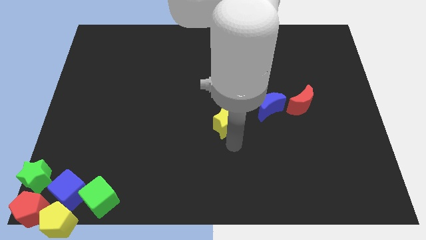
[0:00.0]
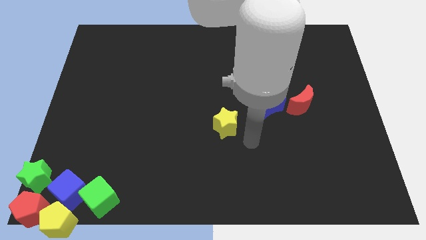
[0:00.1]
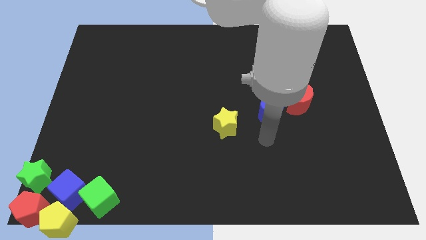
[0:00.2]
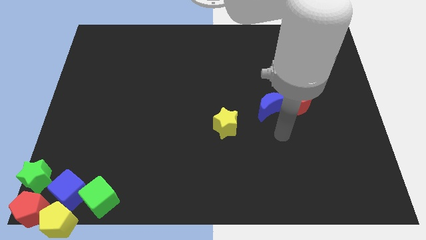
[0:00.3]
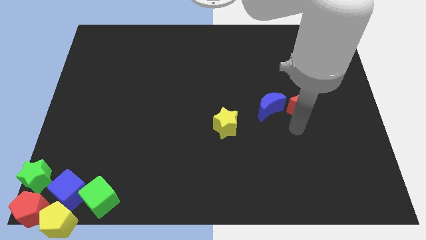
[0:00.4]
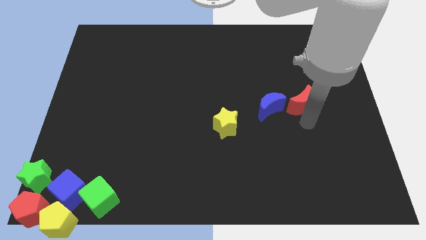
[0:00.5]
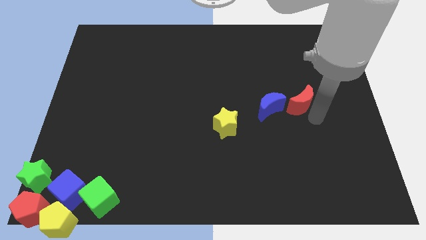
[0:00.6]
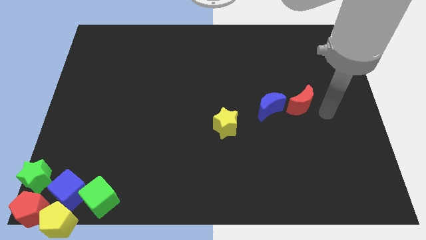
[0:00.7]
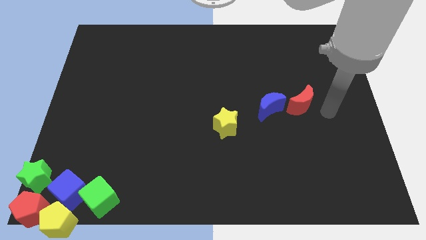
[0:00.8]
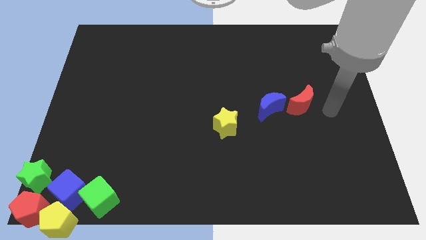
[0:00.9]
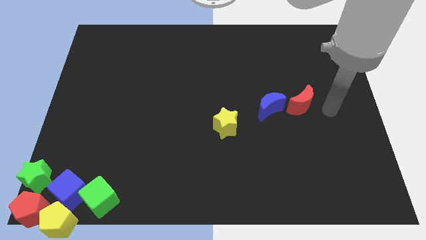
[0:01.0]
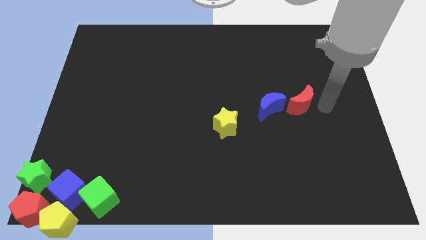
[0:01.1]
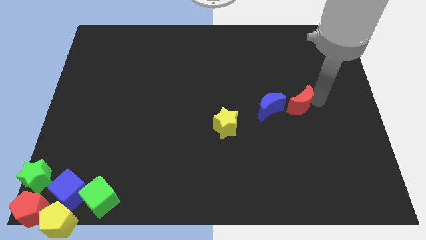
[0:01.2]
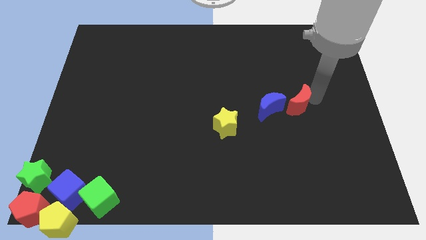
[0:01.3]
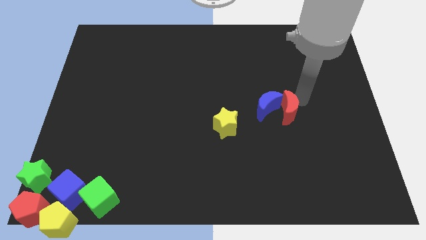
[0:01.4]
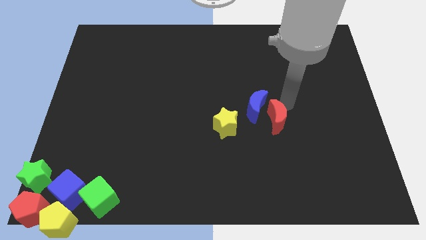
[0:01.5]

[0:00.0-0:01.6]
slightly push the red moon

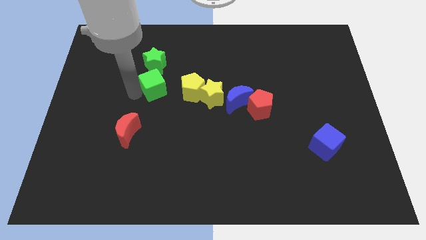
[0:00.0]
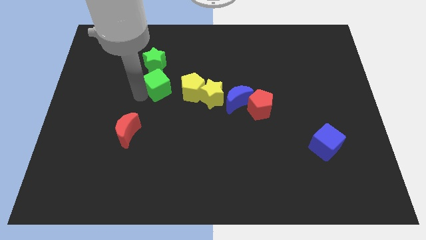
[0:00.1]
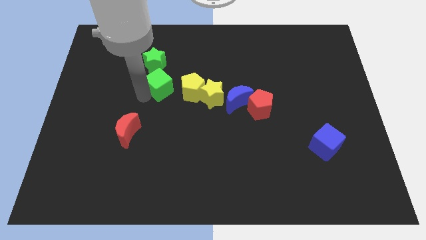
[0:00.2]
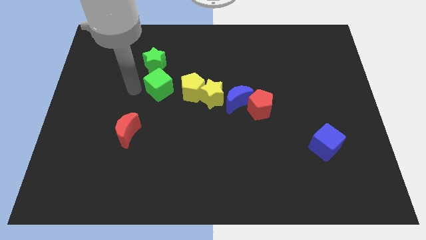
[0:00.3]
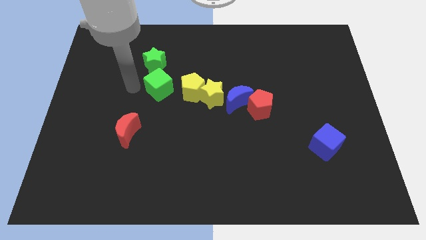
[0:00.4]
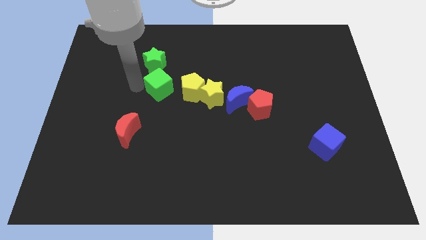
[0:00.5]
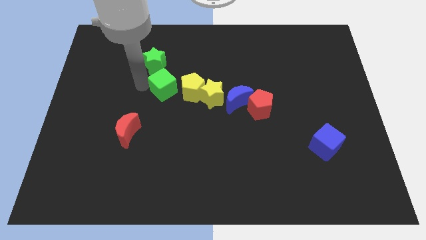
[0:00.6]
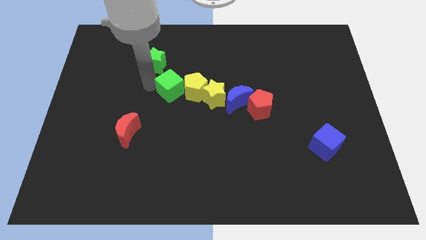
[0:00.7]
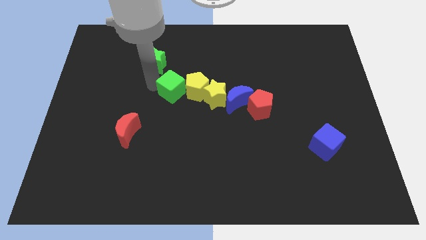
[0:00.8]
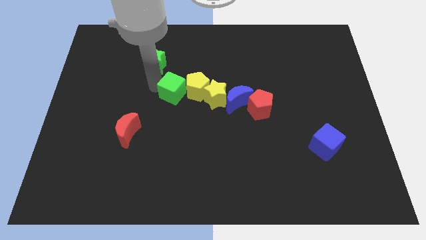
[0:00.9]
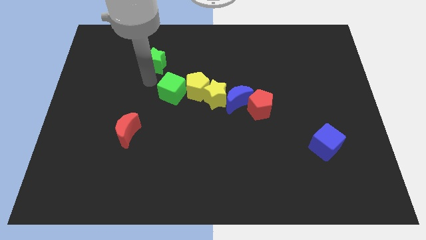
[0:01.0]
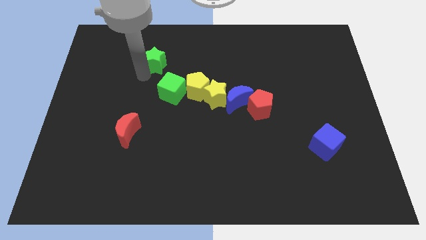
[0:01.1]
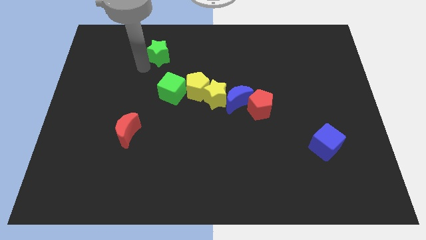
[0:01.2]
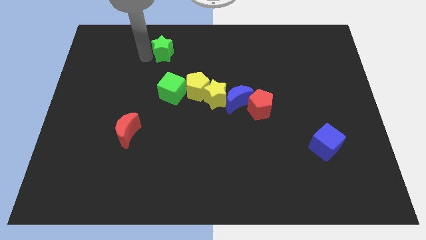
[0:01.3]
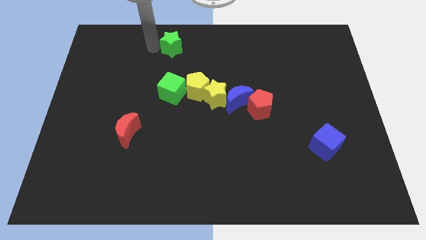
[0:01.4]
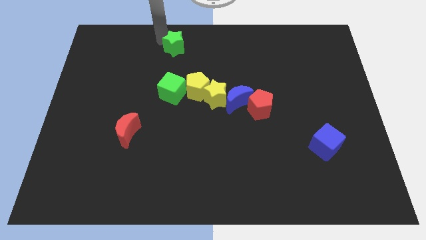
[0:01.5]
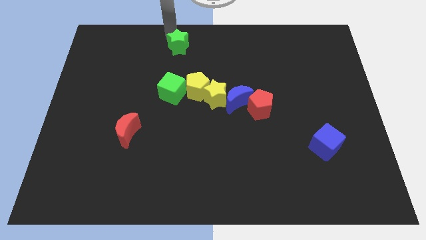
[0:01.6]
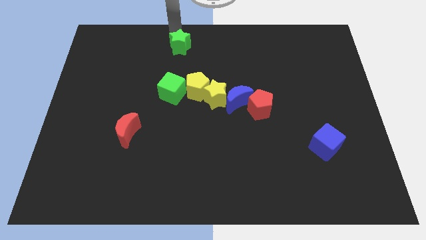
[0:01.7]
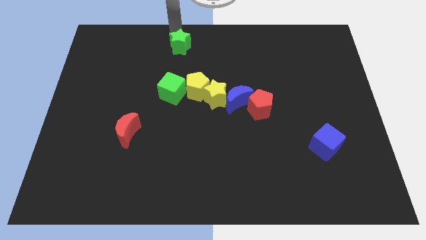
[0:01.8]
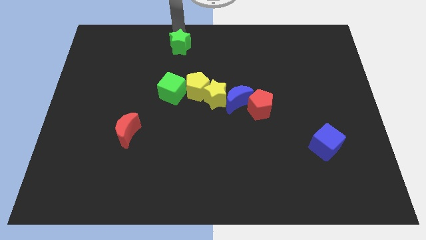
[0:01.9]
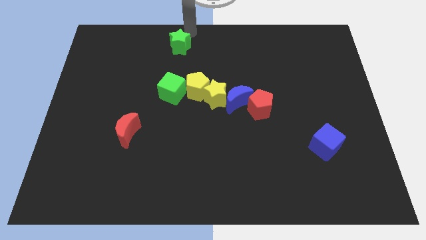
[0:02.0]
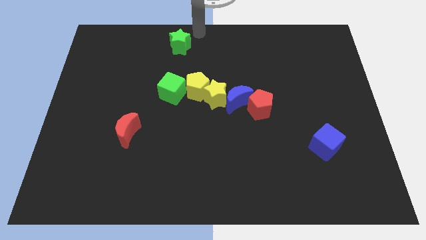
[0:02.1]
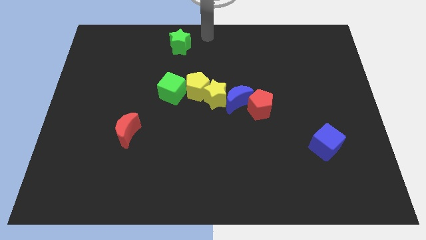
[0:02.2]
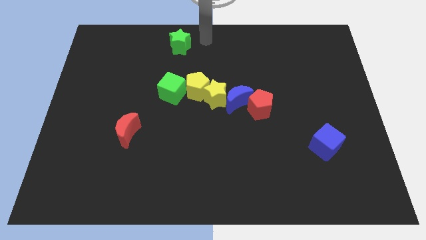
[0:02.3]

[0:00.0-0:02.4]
place the green star parallel to the green block

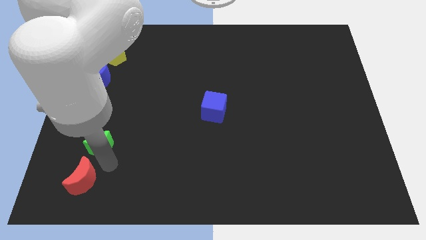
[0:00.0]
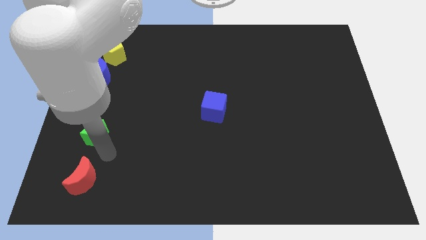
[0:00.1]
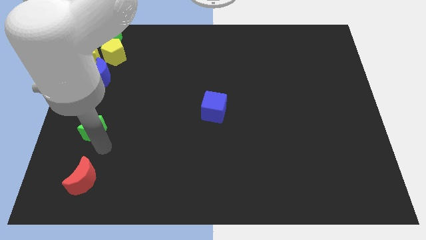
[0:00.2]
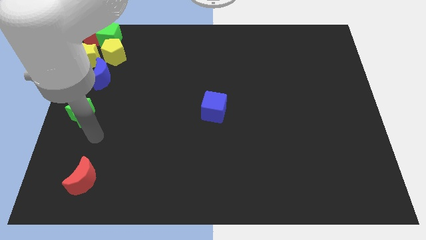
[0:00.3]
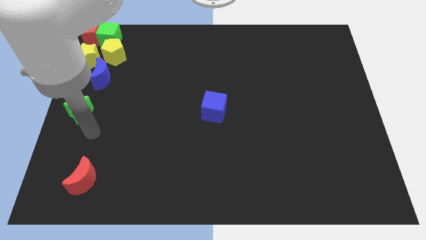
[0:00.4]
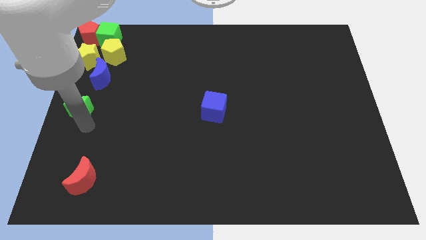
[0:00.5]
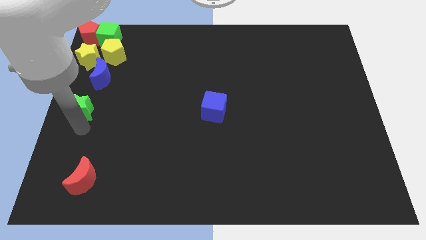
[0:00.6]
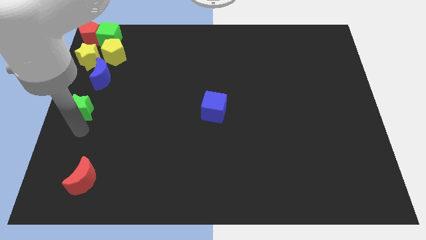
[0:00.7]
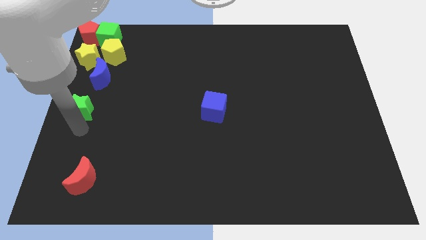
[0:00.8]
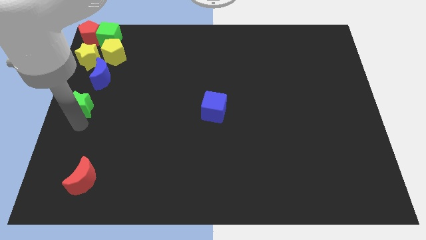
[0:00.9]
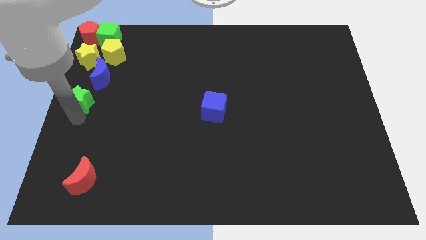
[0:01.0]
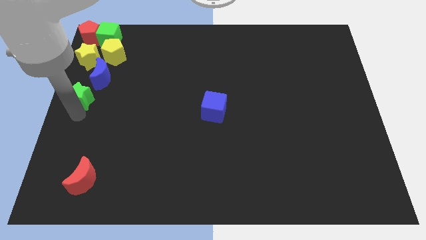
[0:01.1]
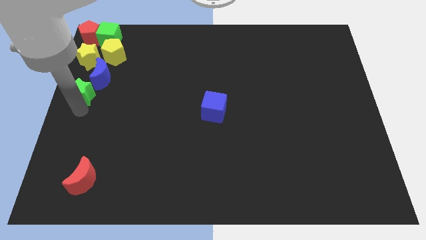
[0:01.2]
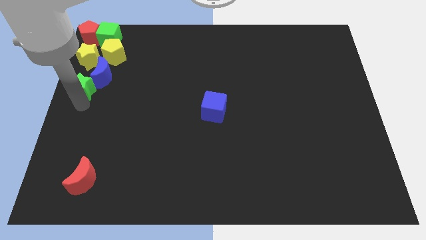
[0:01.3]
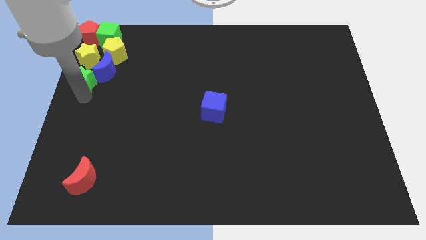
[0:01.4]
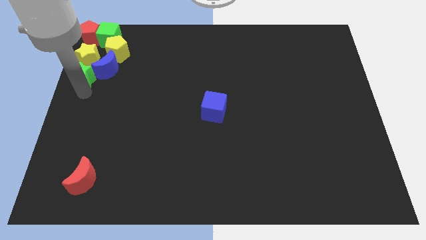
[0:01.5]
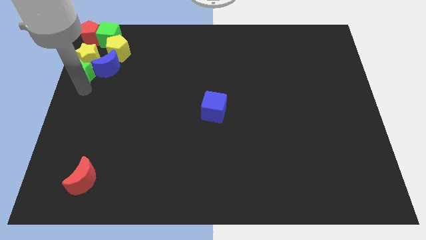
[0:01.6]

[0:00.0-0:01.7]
move the green star to the bottom of the yellow star

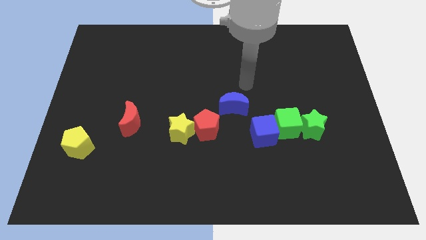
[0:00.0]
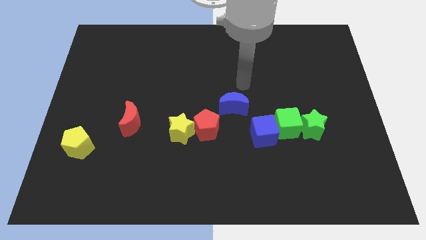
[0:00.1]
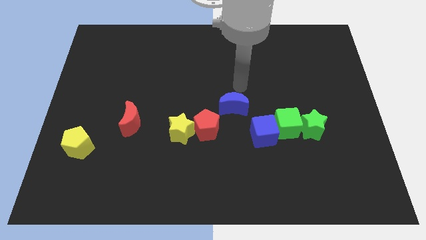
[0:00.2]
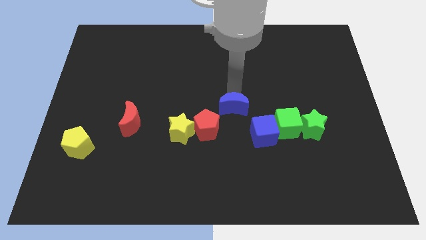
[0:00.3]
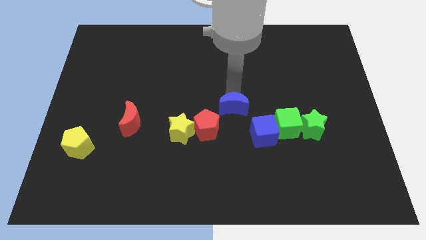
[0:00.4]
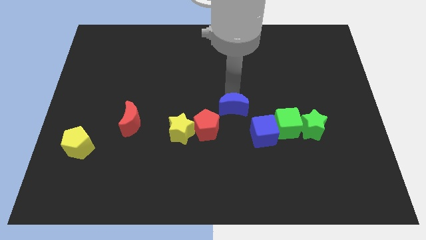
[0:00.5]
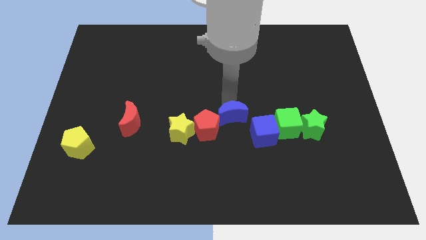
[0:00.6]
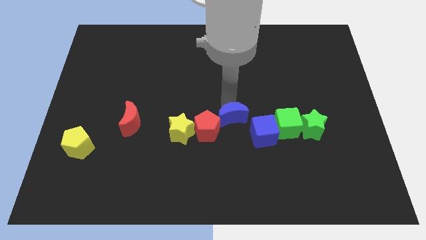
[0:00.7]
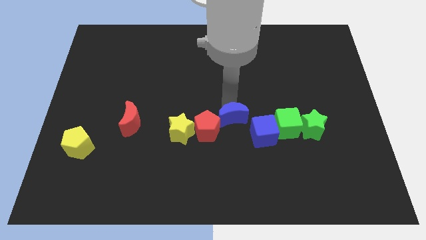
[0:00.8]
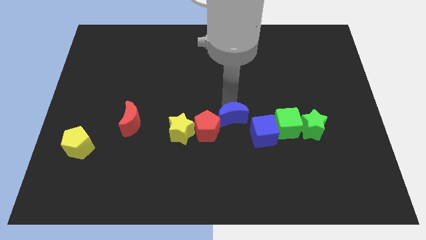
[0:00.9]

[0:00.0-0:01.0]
push the blue moon into the red pentagon

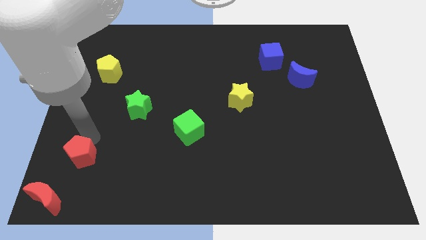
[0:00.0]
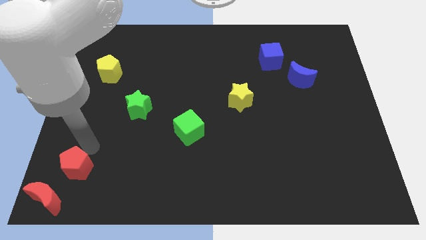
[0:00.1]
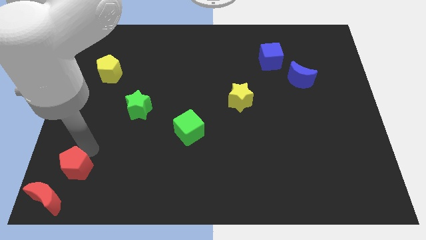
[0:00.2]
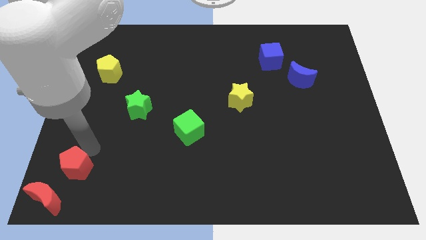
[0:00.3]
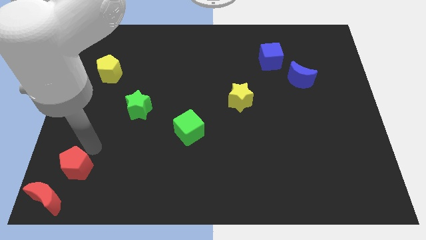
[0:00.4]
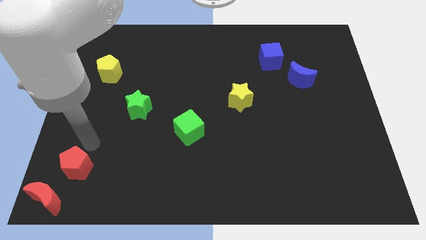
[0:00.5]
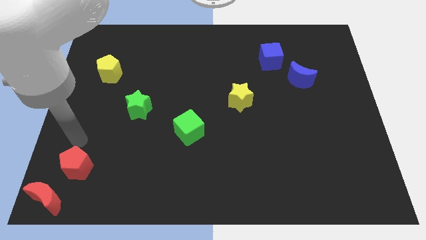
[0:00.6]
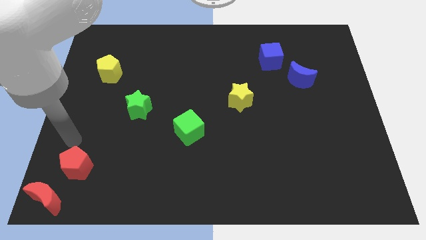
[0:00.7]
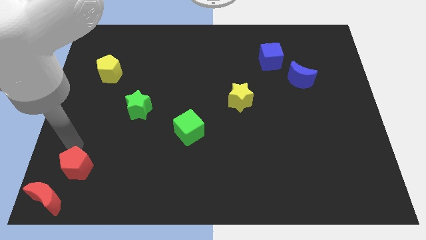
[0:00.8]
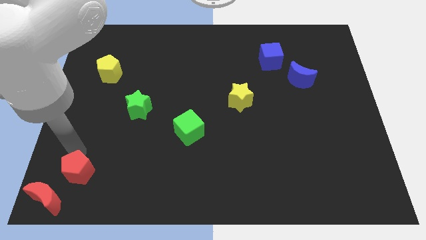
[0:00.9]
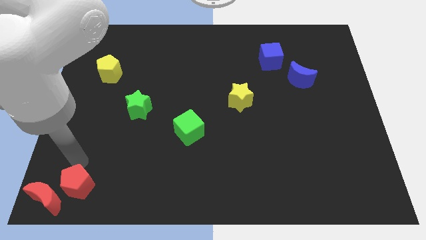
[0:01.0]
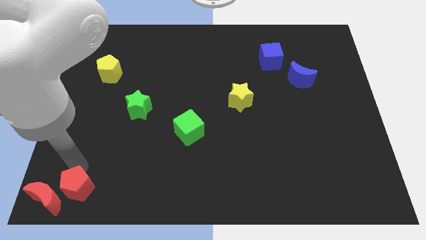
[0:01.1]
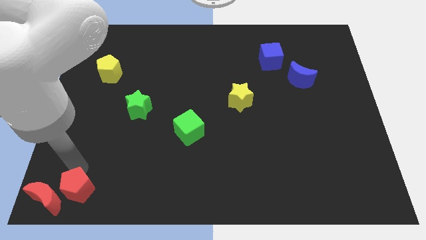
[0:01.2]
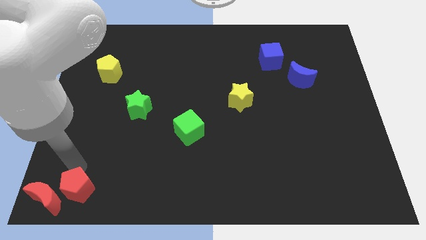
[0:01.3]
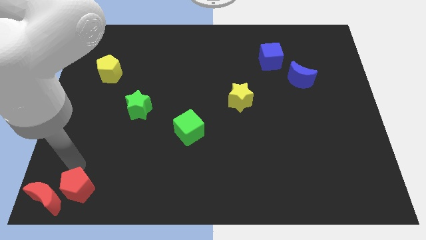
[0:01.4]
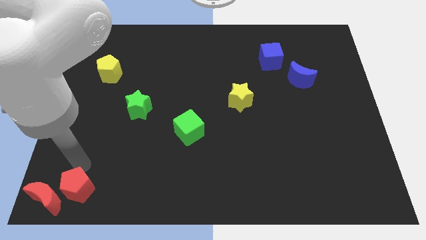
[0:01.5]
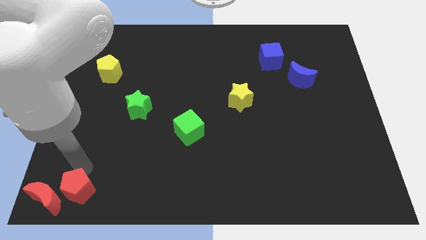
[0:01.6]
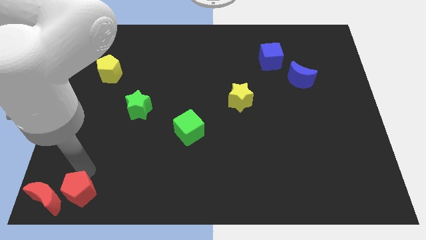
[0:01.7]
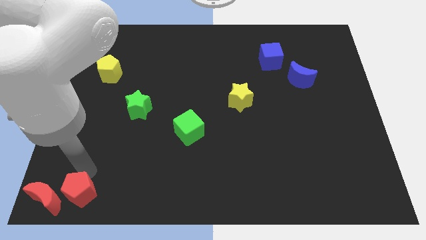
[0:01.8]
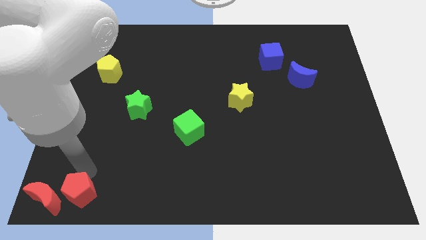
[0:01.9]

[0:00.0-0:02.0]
move the red pentagon left to the red crescent

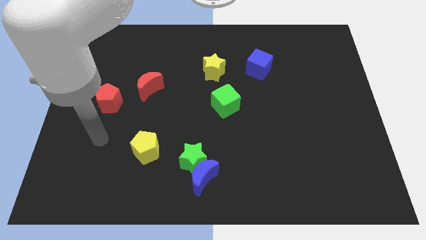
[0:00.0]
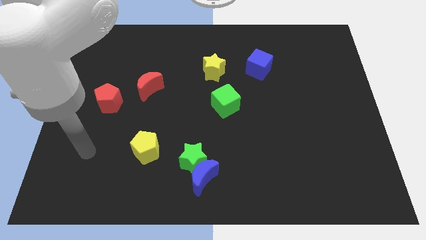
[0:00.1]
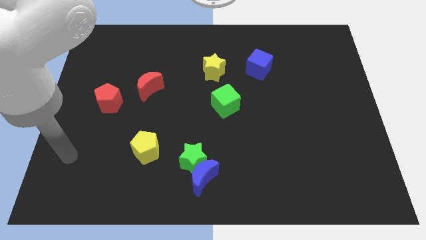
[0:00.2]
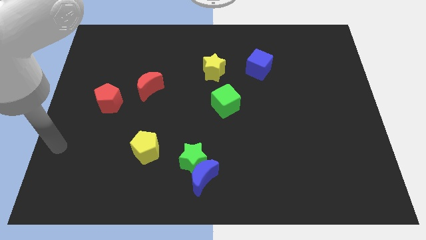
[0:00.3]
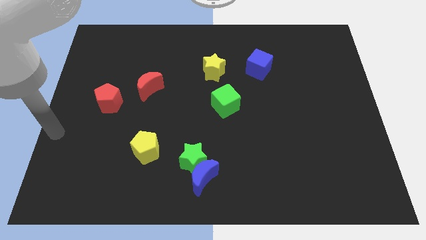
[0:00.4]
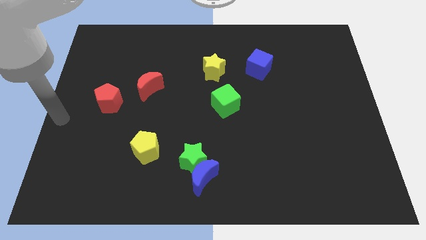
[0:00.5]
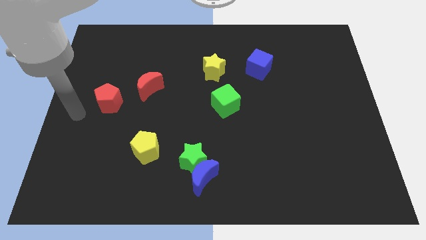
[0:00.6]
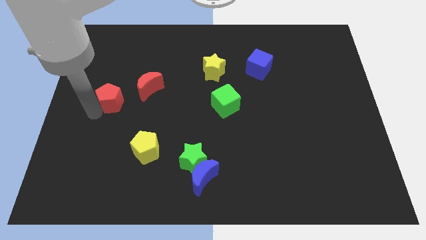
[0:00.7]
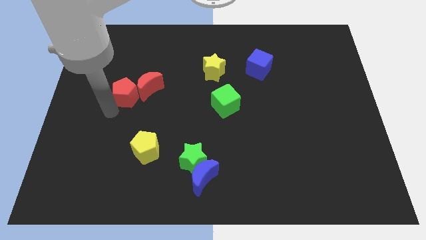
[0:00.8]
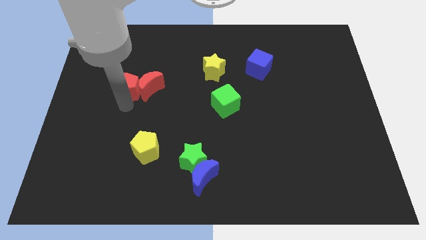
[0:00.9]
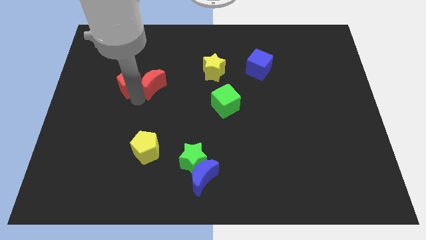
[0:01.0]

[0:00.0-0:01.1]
move the red pentagon into the left side of the red crescent
